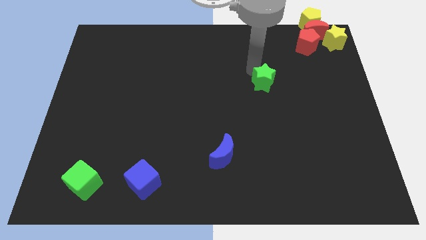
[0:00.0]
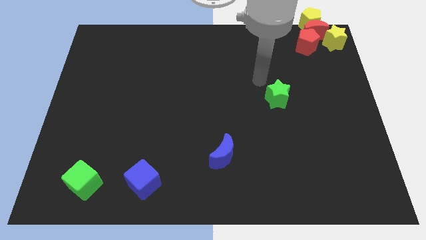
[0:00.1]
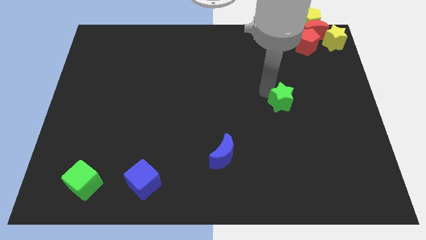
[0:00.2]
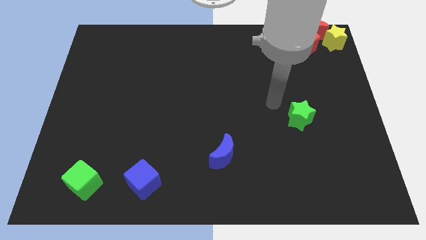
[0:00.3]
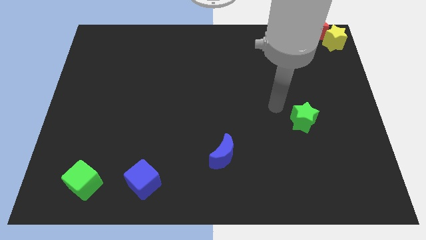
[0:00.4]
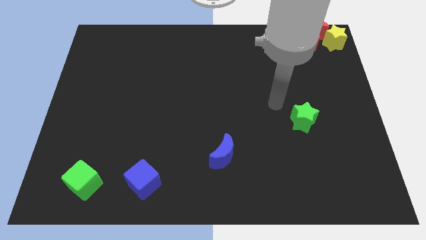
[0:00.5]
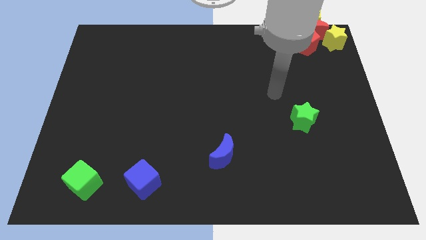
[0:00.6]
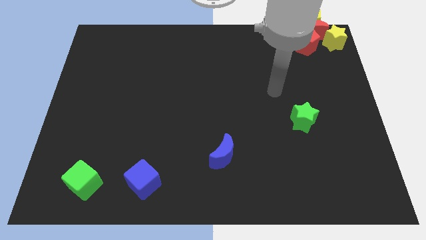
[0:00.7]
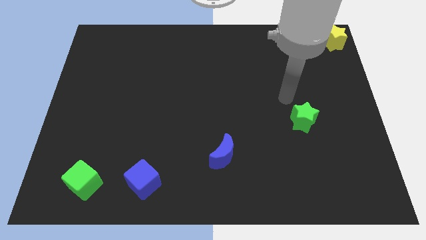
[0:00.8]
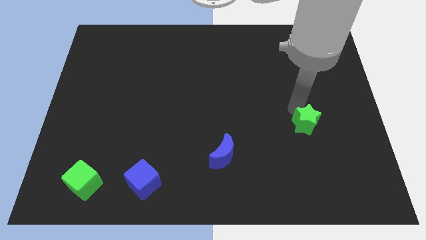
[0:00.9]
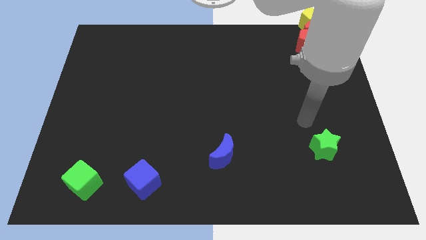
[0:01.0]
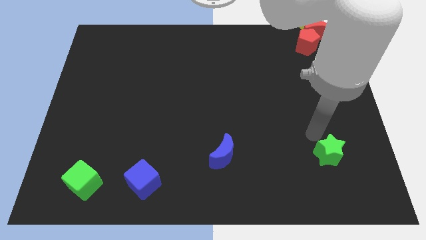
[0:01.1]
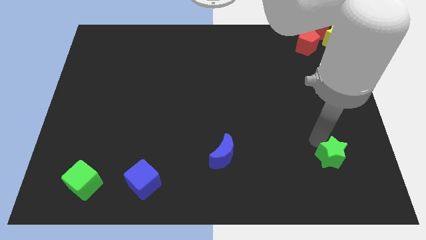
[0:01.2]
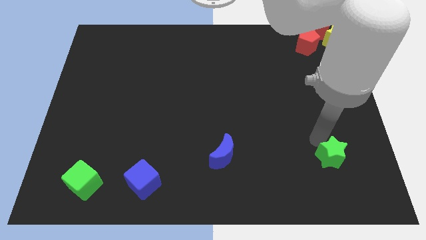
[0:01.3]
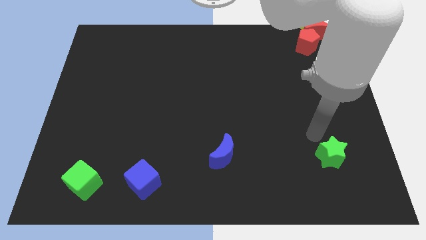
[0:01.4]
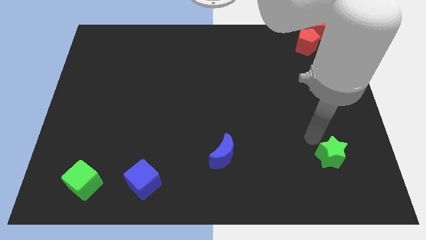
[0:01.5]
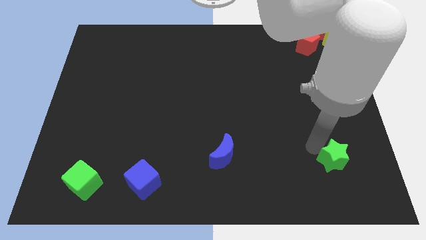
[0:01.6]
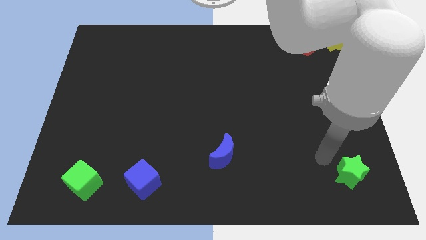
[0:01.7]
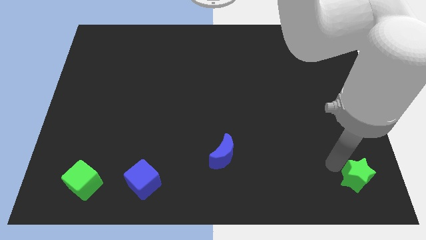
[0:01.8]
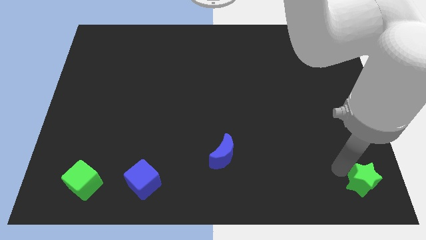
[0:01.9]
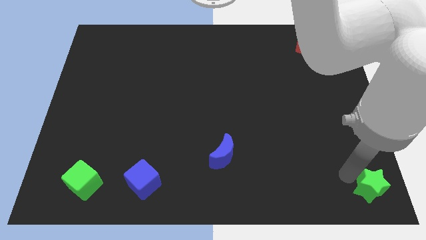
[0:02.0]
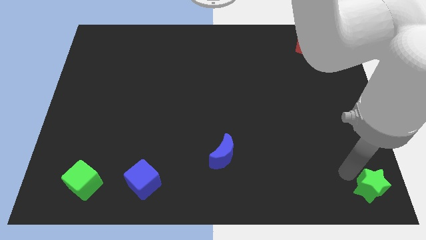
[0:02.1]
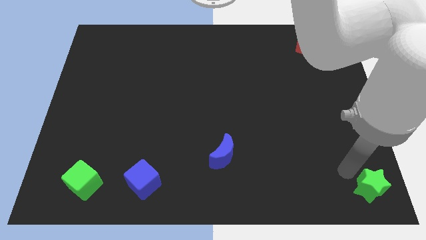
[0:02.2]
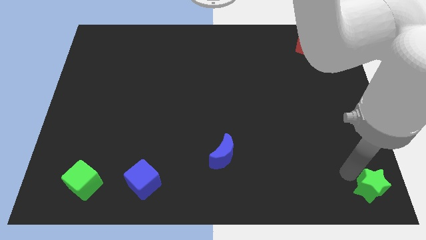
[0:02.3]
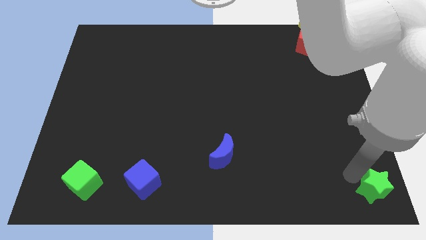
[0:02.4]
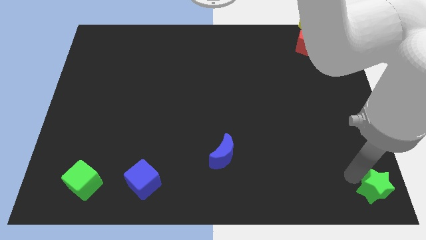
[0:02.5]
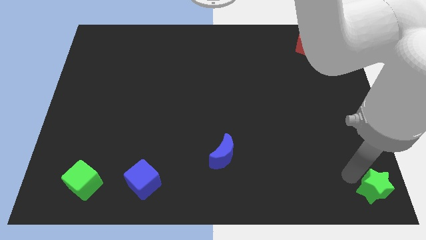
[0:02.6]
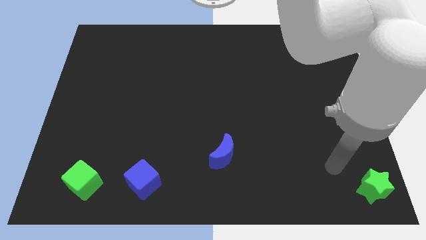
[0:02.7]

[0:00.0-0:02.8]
drag the green star towards the bottom right corner of the board

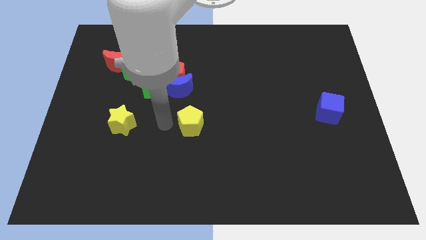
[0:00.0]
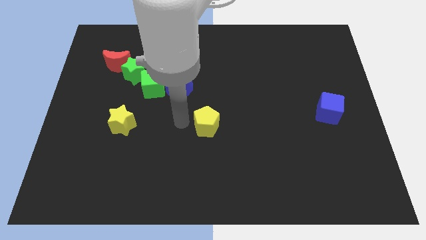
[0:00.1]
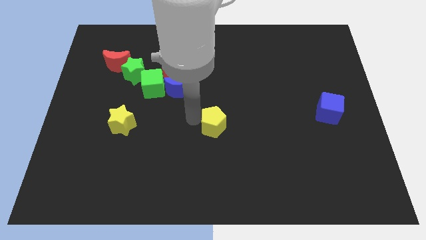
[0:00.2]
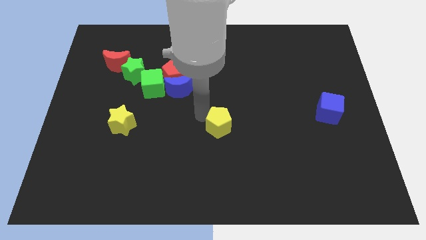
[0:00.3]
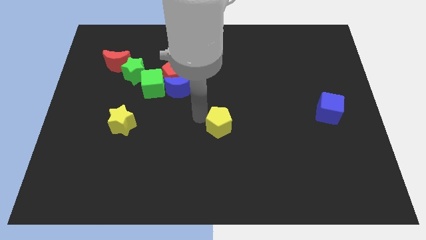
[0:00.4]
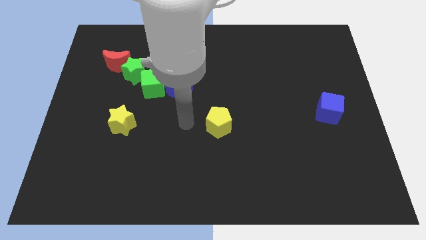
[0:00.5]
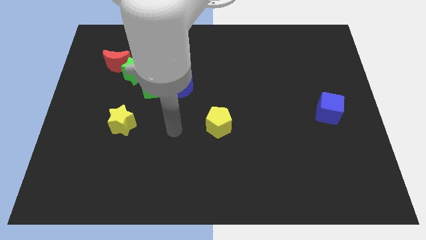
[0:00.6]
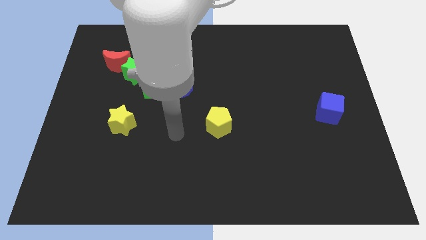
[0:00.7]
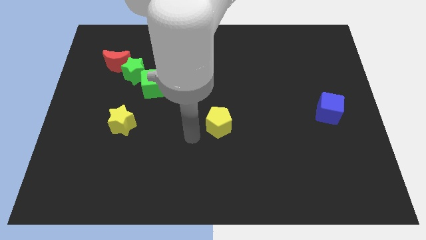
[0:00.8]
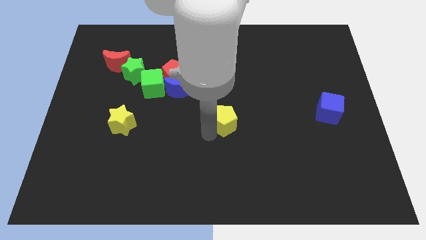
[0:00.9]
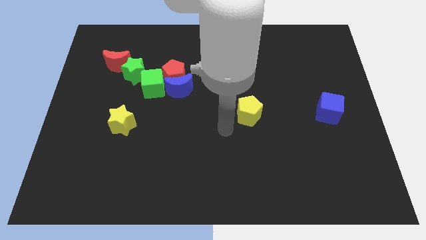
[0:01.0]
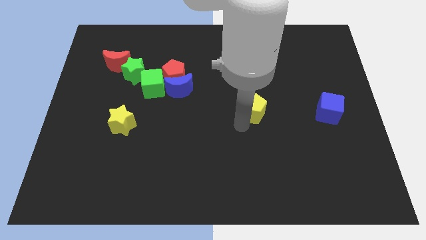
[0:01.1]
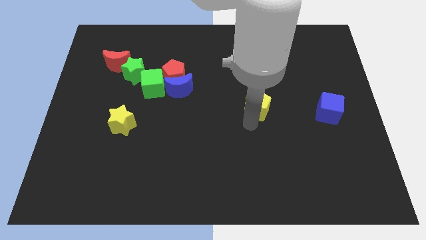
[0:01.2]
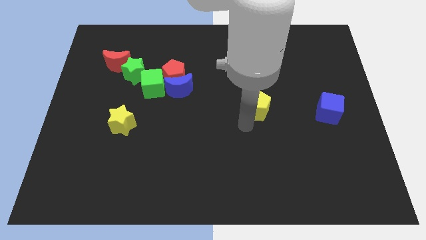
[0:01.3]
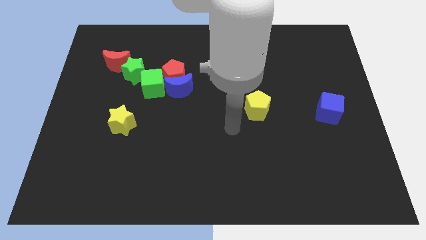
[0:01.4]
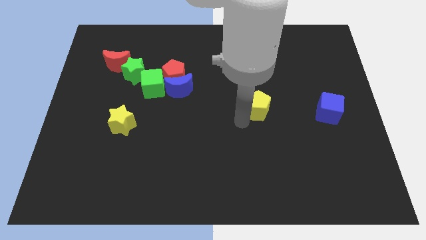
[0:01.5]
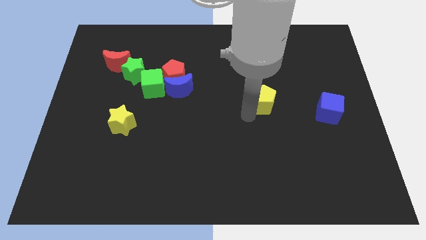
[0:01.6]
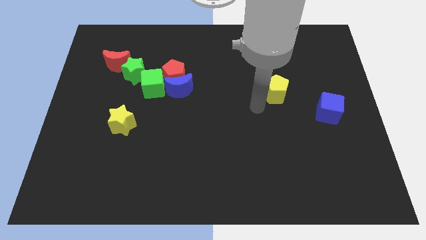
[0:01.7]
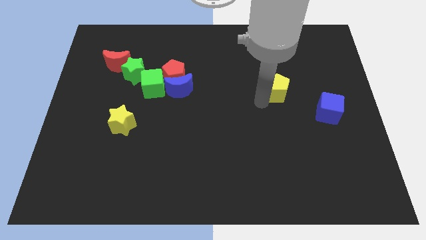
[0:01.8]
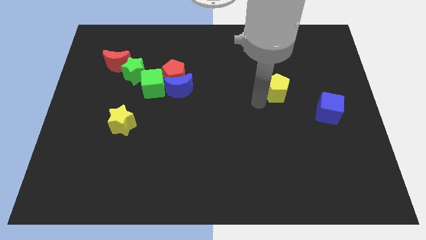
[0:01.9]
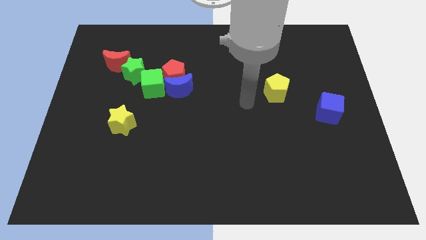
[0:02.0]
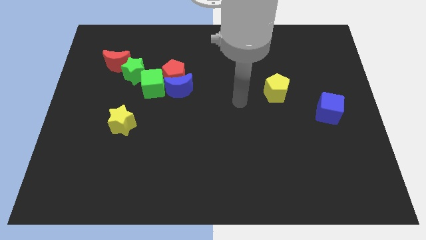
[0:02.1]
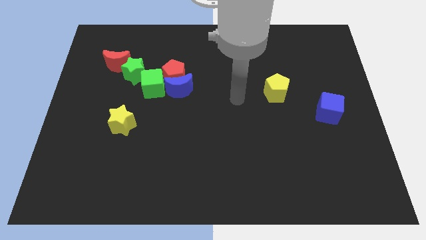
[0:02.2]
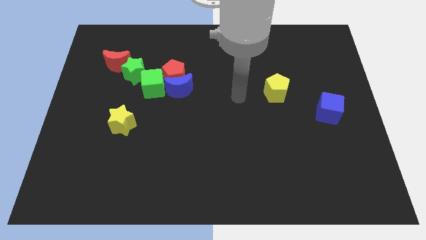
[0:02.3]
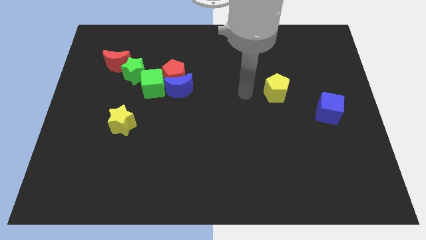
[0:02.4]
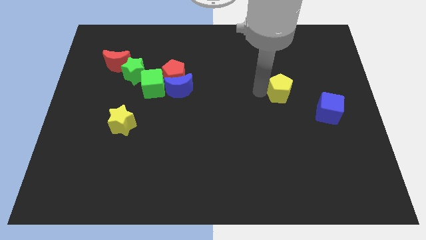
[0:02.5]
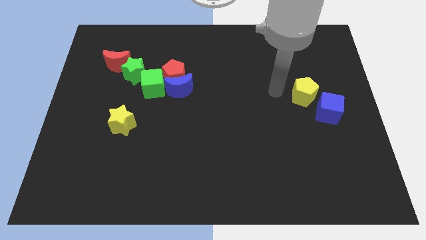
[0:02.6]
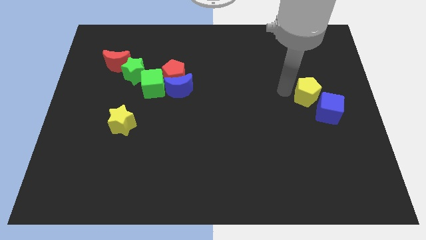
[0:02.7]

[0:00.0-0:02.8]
move yellow pentagon towards blue cube

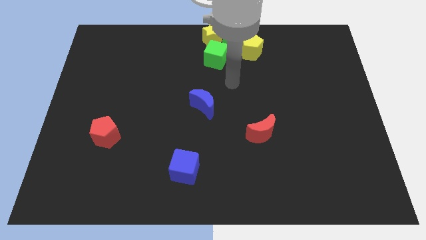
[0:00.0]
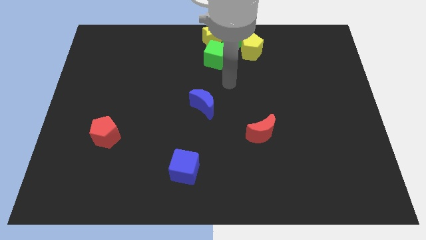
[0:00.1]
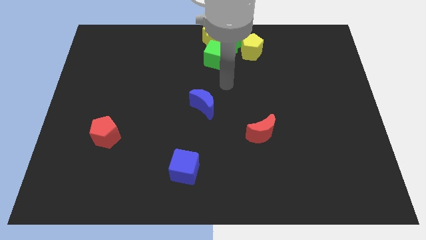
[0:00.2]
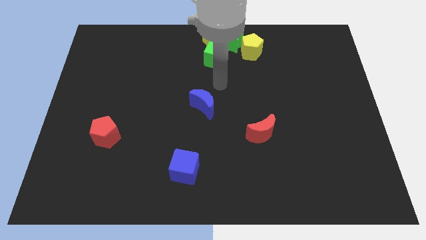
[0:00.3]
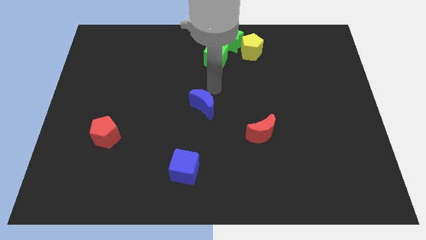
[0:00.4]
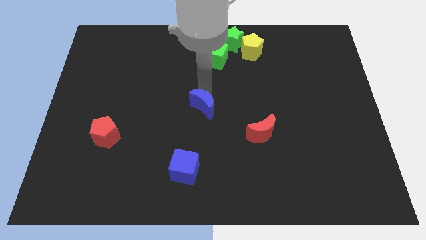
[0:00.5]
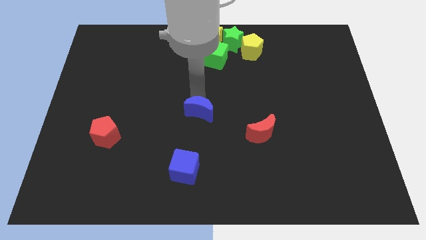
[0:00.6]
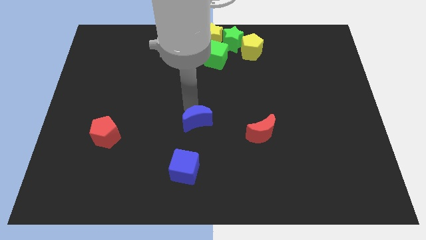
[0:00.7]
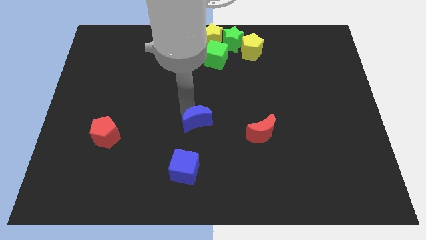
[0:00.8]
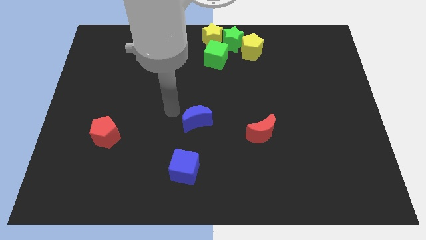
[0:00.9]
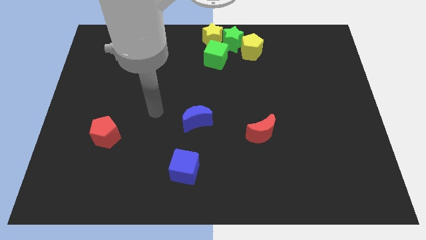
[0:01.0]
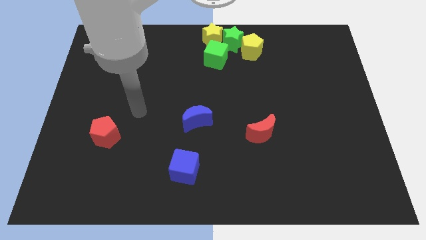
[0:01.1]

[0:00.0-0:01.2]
push the blue crescent to the down

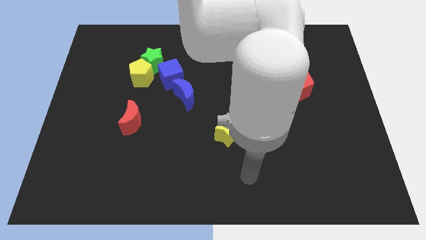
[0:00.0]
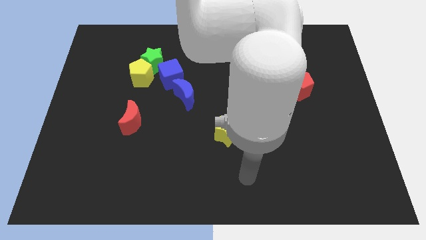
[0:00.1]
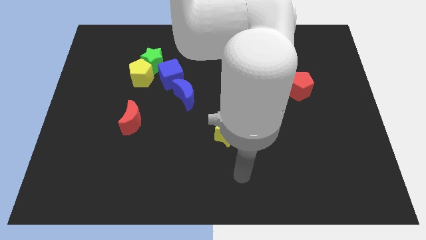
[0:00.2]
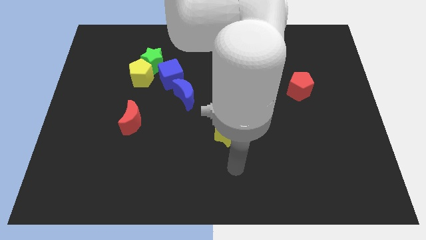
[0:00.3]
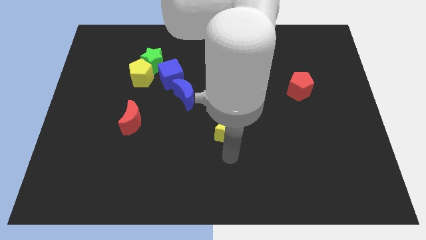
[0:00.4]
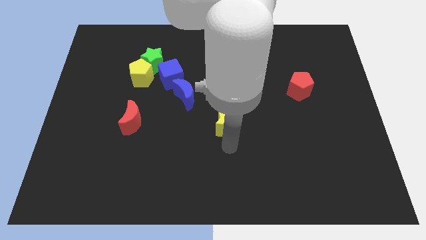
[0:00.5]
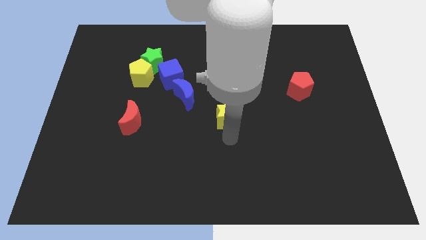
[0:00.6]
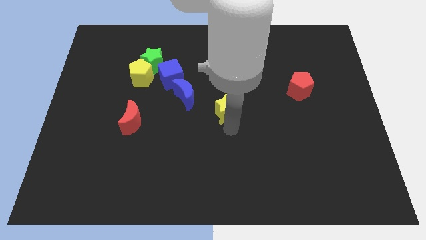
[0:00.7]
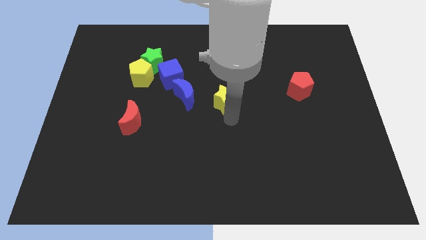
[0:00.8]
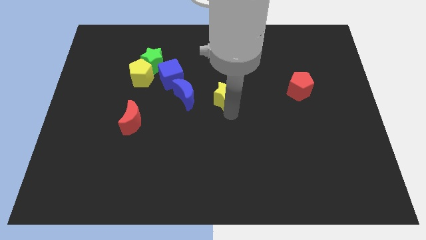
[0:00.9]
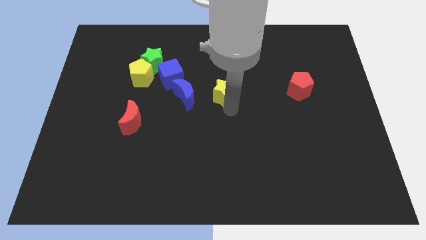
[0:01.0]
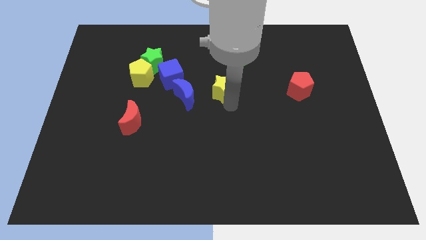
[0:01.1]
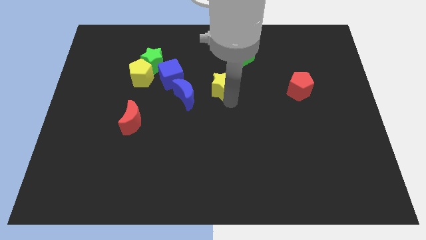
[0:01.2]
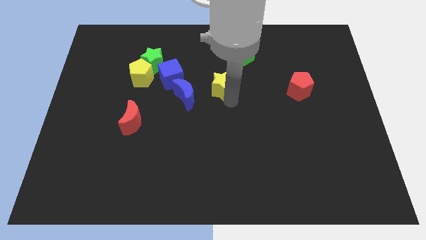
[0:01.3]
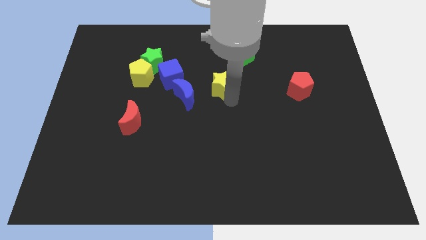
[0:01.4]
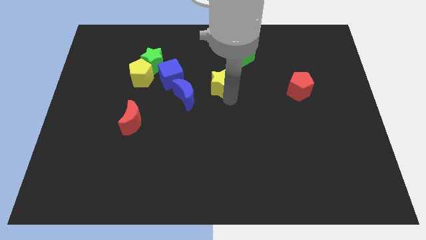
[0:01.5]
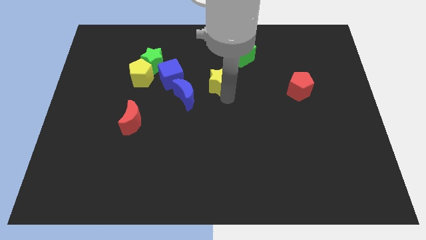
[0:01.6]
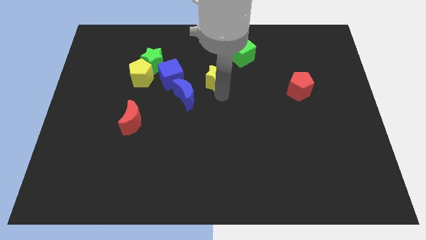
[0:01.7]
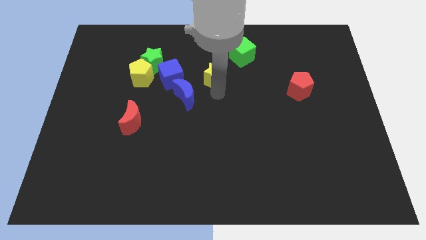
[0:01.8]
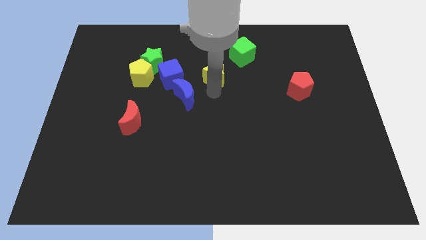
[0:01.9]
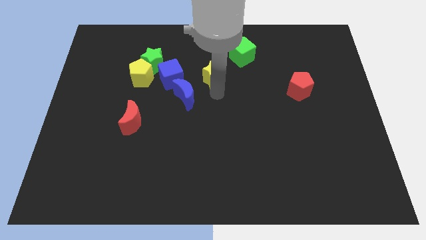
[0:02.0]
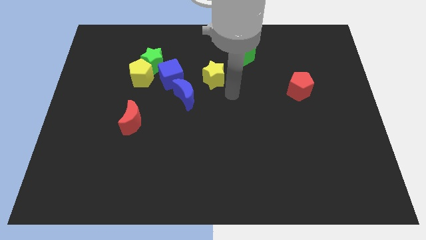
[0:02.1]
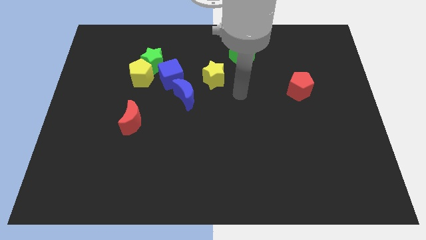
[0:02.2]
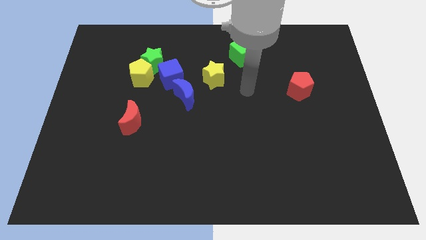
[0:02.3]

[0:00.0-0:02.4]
move the yellow star right side of the blue cube
